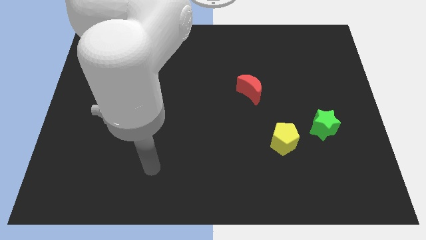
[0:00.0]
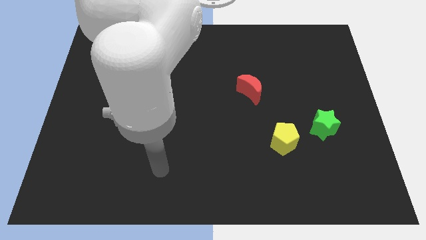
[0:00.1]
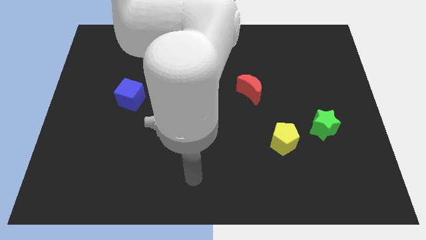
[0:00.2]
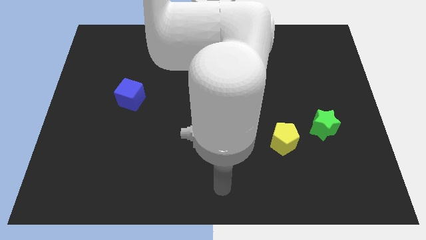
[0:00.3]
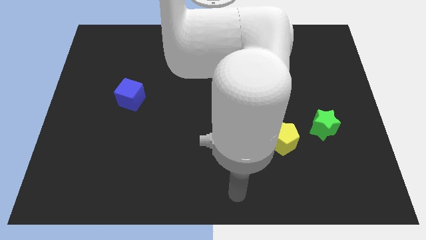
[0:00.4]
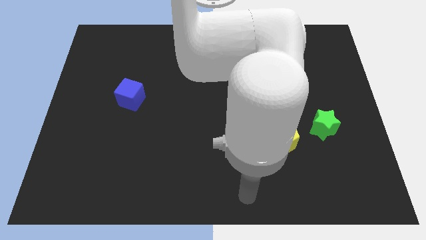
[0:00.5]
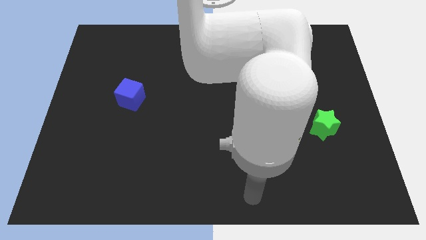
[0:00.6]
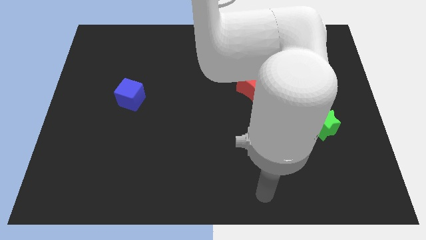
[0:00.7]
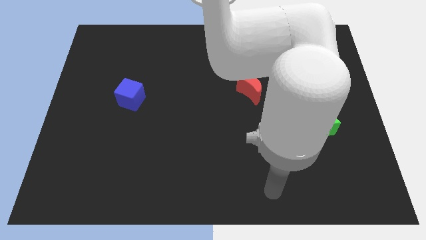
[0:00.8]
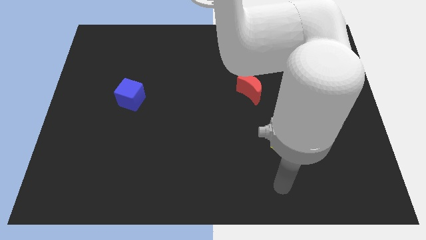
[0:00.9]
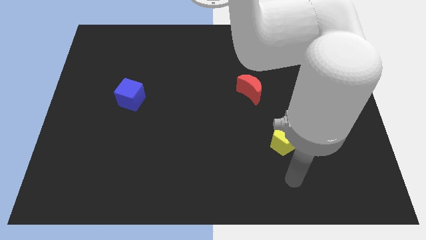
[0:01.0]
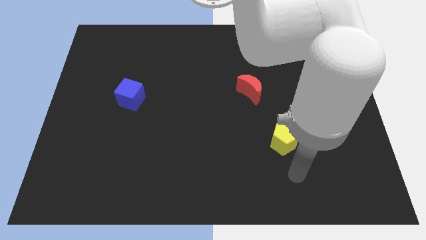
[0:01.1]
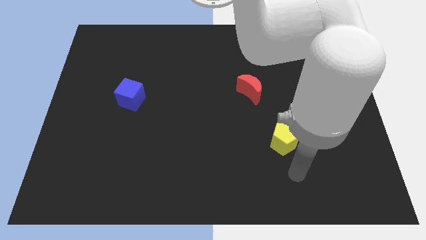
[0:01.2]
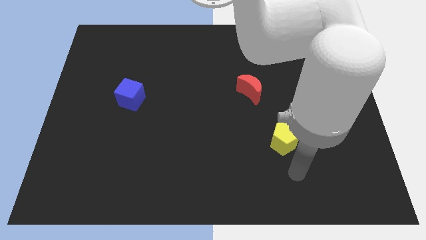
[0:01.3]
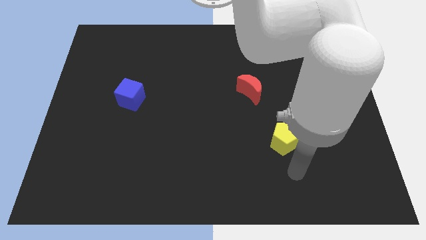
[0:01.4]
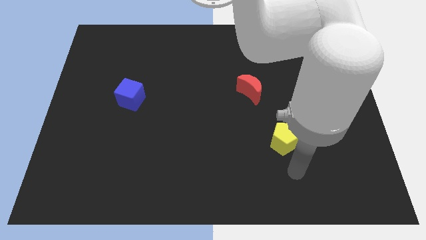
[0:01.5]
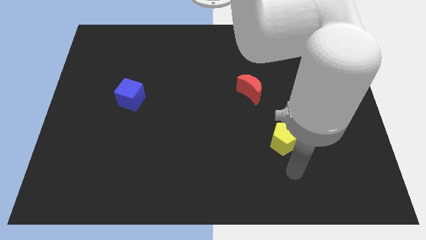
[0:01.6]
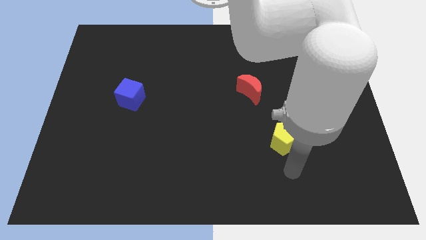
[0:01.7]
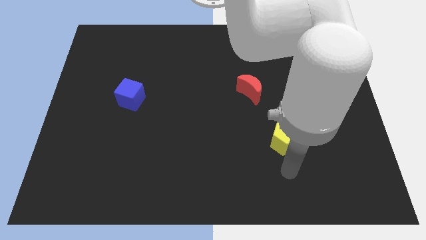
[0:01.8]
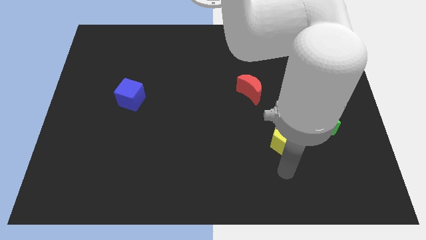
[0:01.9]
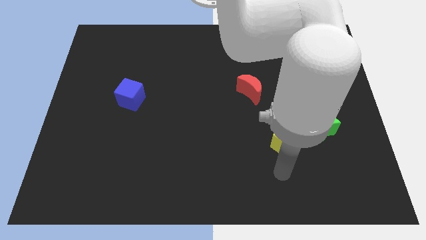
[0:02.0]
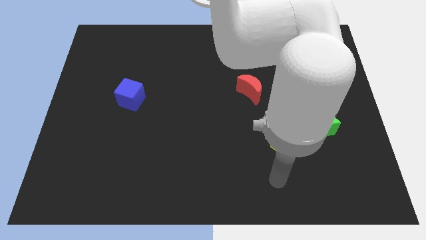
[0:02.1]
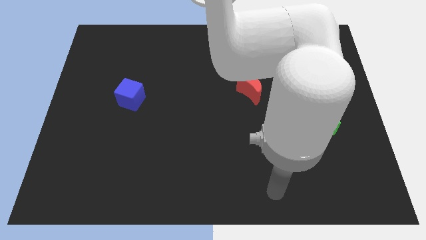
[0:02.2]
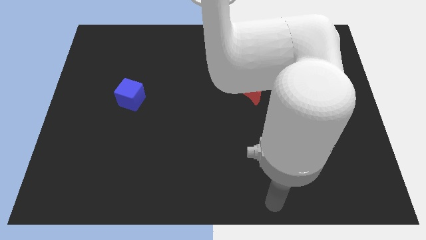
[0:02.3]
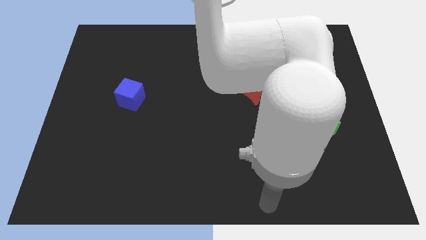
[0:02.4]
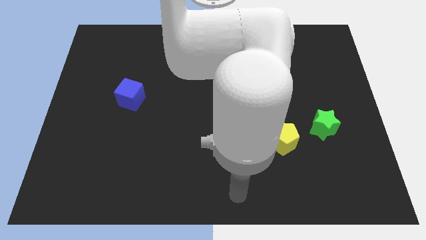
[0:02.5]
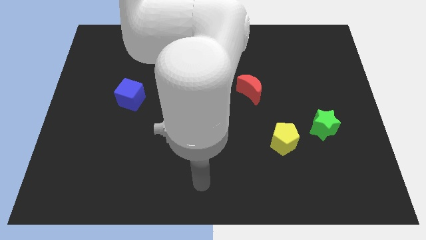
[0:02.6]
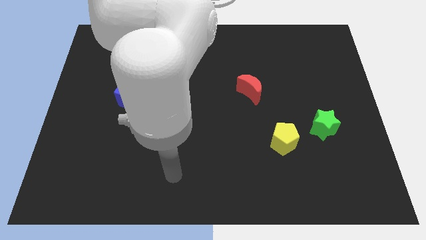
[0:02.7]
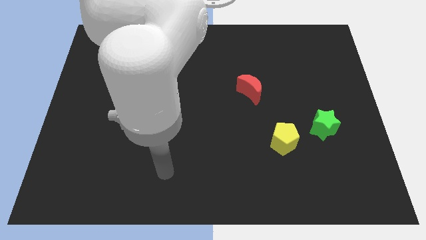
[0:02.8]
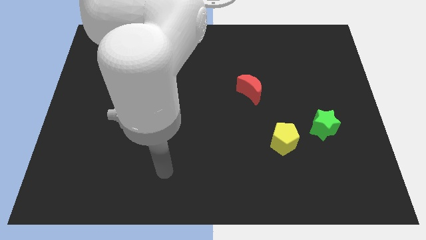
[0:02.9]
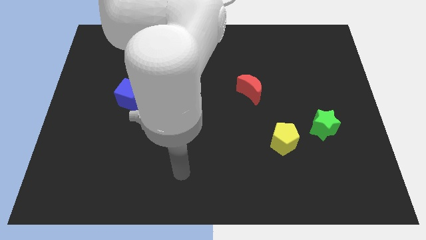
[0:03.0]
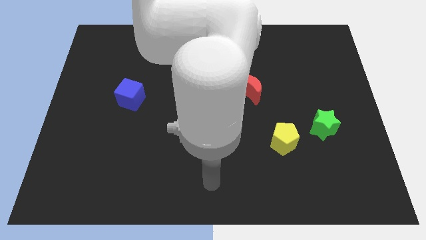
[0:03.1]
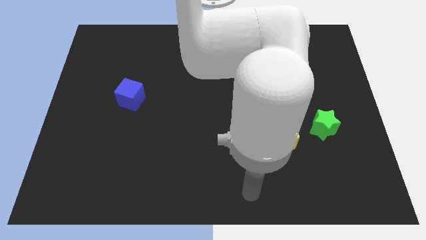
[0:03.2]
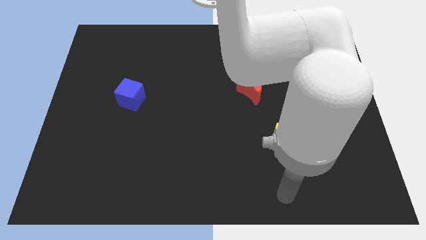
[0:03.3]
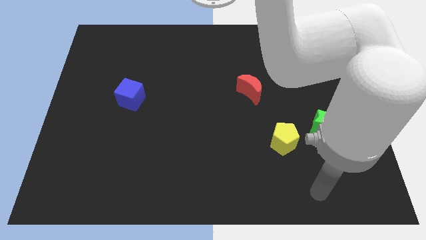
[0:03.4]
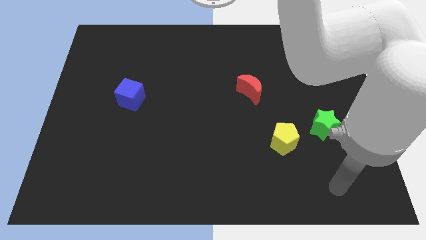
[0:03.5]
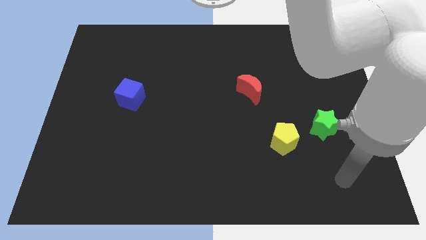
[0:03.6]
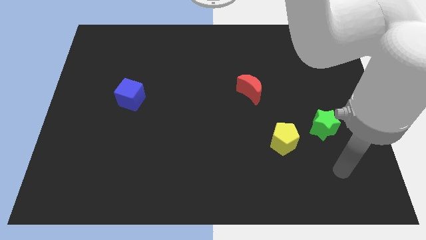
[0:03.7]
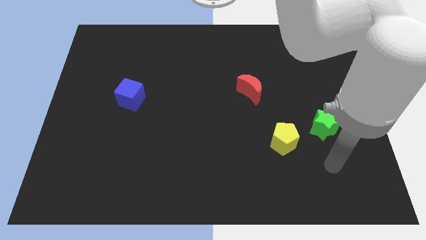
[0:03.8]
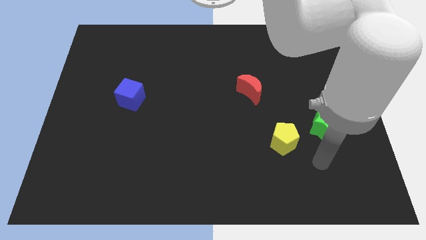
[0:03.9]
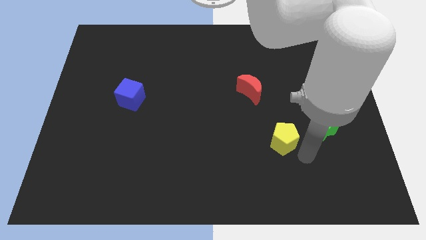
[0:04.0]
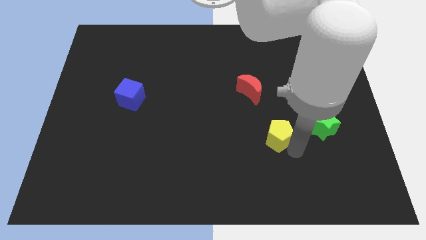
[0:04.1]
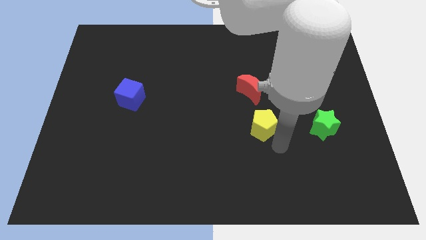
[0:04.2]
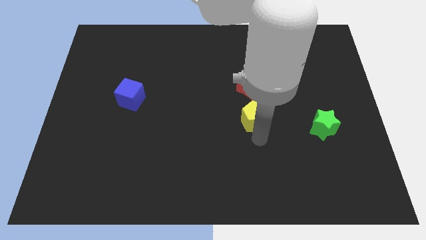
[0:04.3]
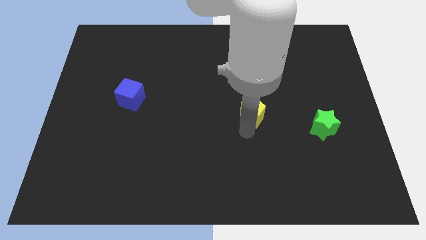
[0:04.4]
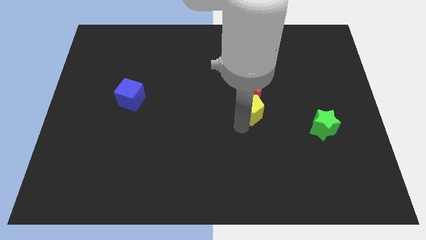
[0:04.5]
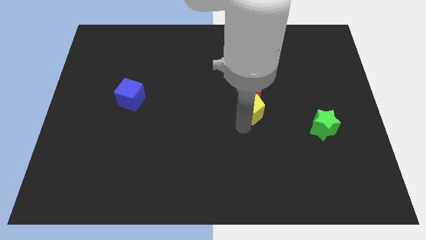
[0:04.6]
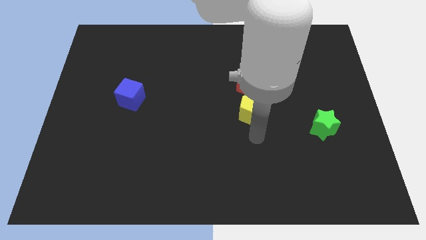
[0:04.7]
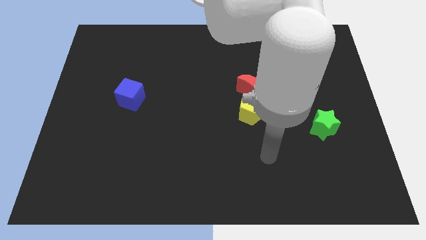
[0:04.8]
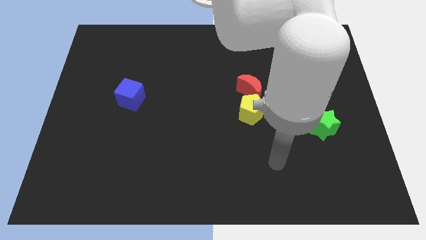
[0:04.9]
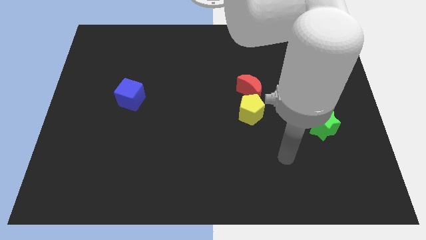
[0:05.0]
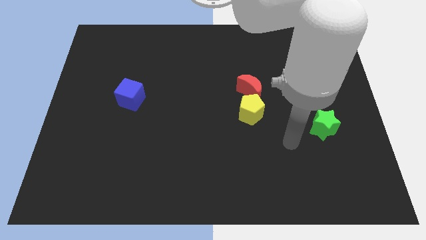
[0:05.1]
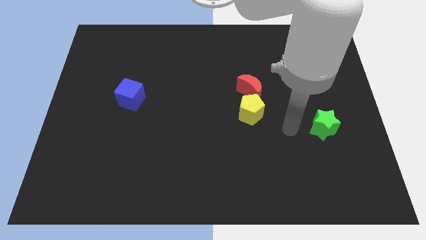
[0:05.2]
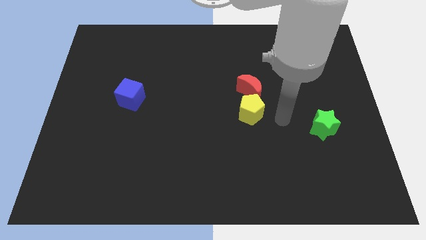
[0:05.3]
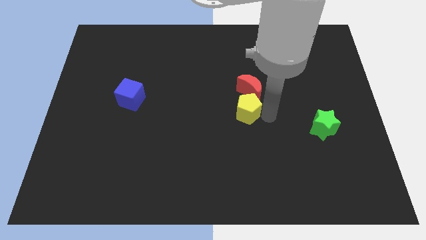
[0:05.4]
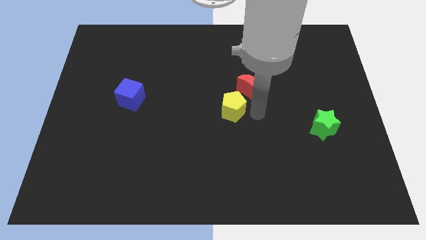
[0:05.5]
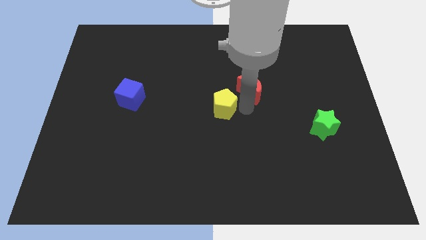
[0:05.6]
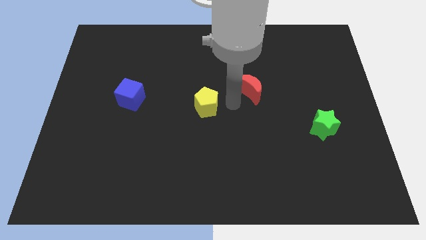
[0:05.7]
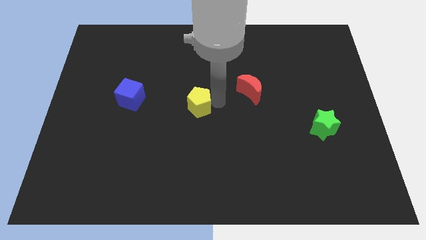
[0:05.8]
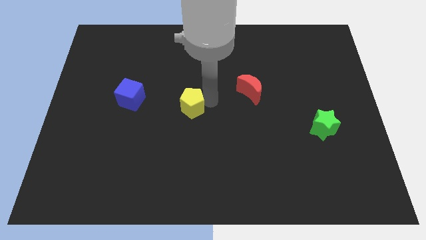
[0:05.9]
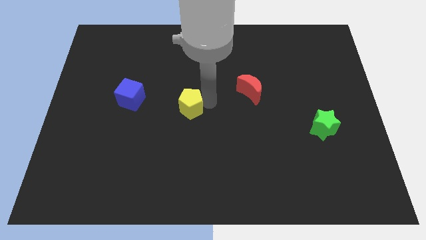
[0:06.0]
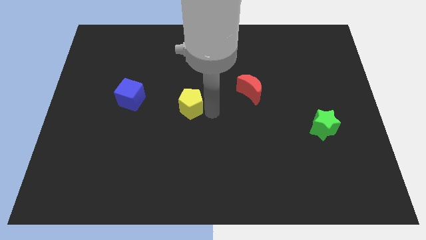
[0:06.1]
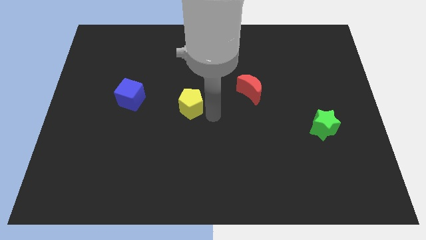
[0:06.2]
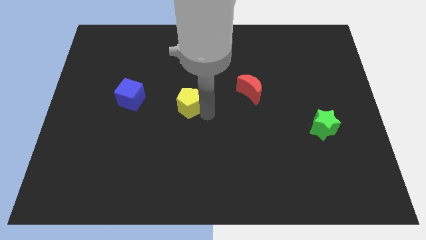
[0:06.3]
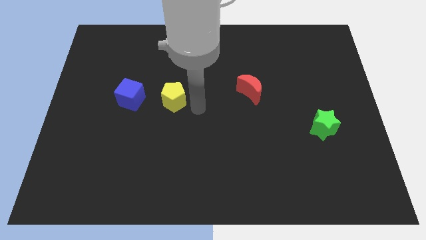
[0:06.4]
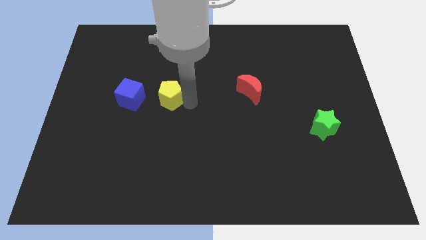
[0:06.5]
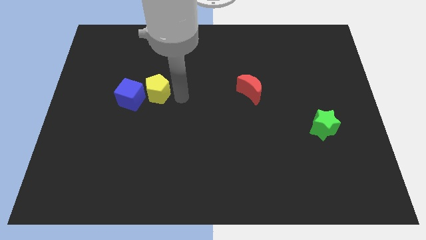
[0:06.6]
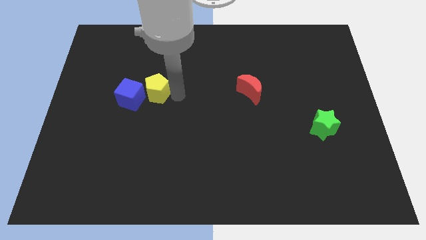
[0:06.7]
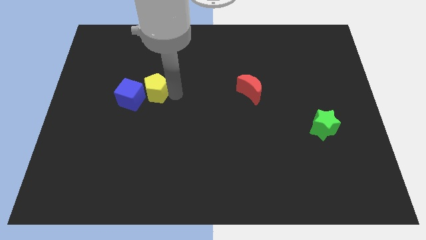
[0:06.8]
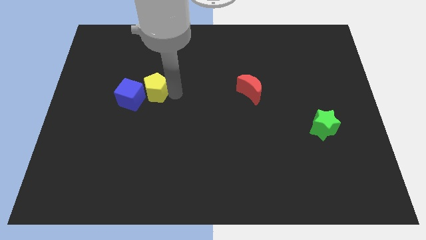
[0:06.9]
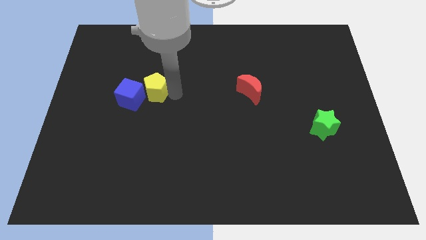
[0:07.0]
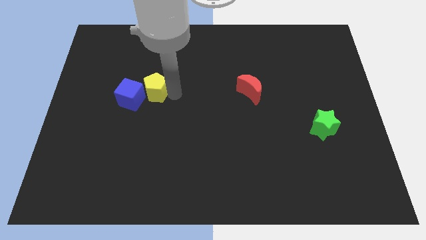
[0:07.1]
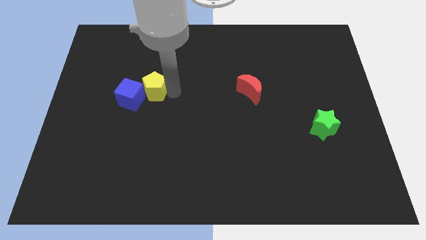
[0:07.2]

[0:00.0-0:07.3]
move the yellow pentagon close to the blue cube

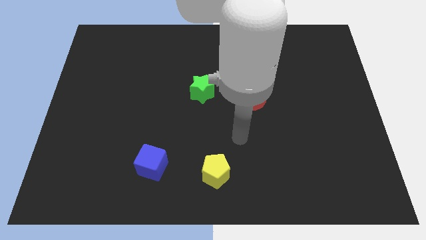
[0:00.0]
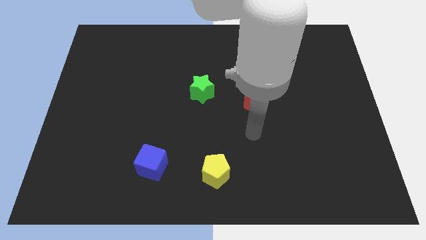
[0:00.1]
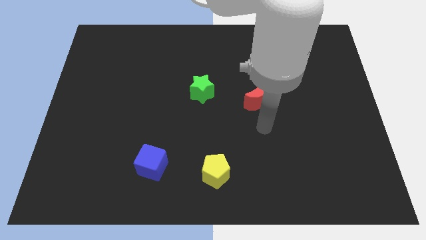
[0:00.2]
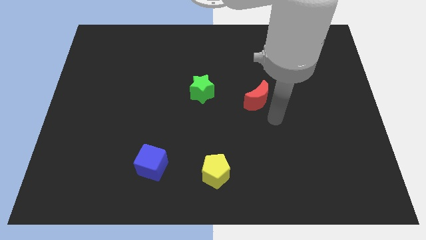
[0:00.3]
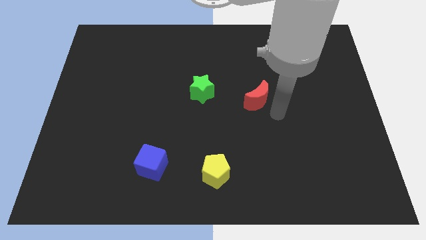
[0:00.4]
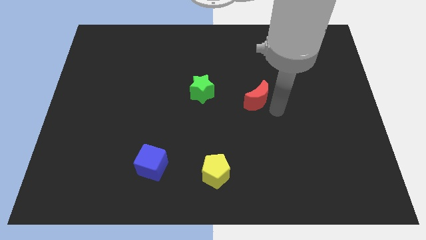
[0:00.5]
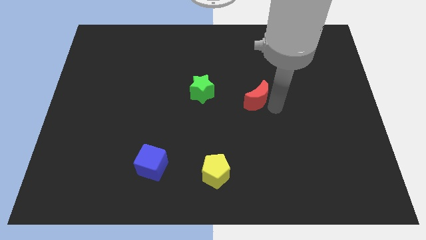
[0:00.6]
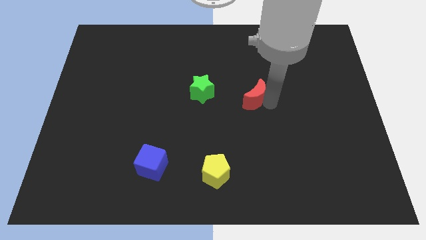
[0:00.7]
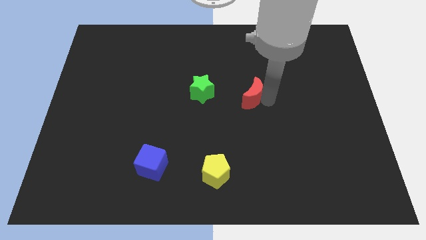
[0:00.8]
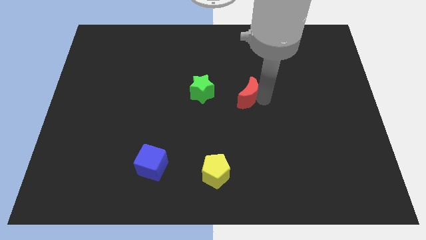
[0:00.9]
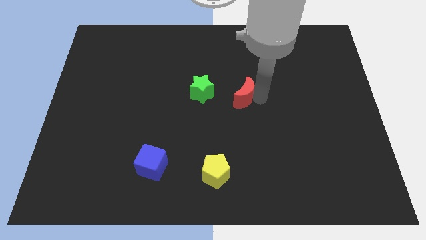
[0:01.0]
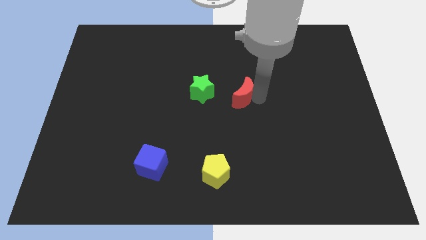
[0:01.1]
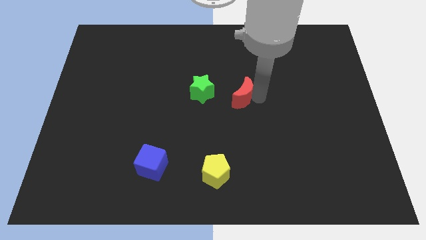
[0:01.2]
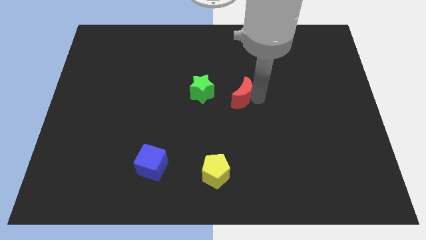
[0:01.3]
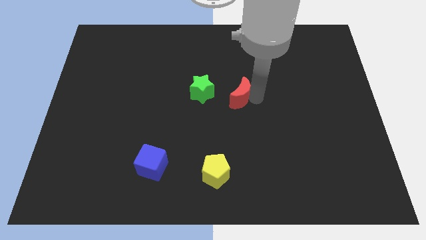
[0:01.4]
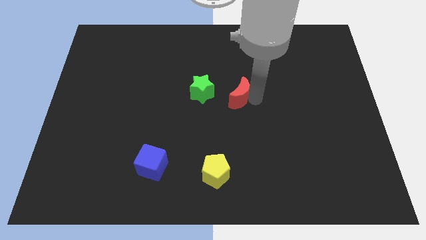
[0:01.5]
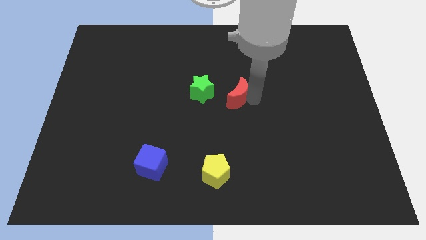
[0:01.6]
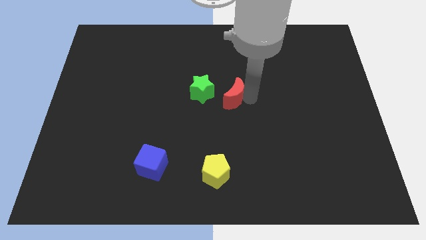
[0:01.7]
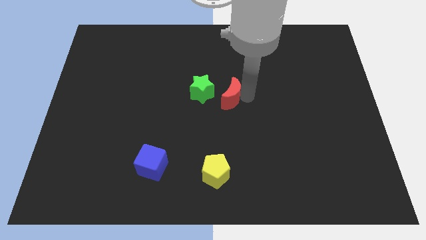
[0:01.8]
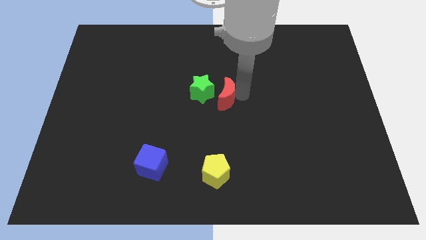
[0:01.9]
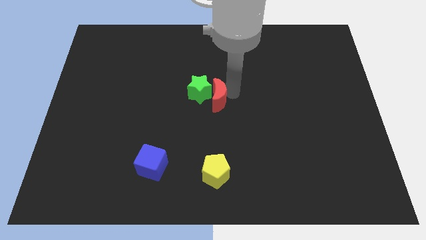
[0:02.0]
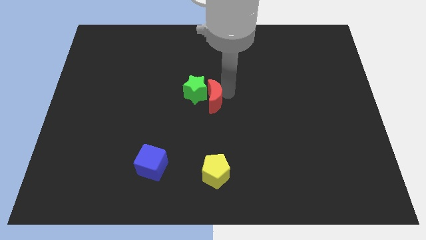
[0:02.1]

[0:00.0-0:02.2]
slide the red block next to the green block
